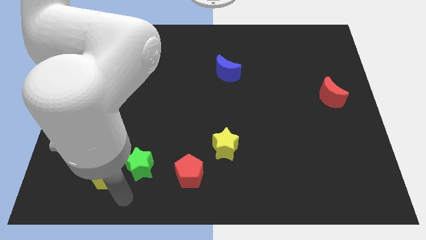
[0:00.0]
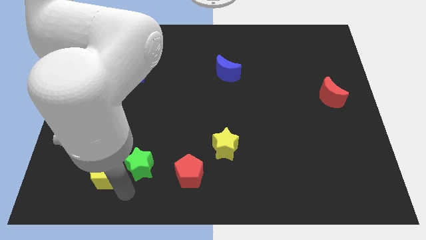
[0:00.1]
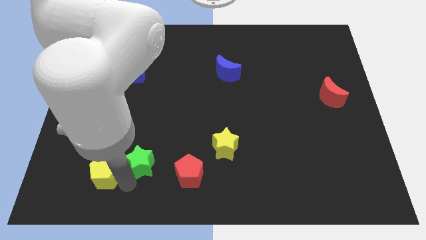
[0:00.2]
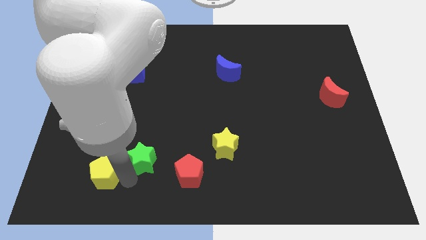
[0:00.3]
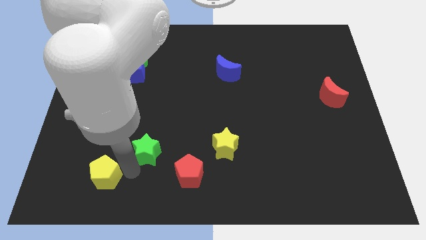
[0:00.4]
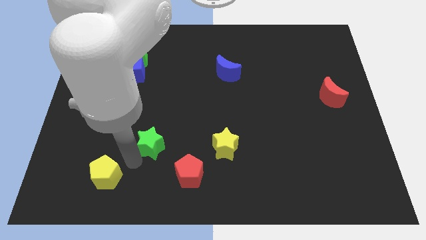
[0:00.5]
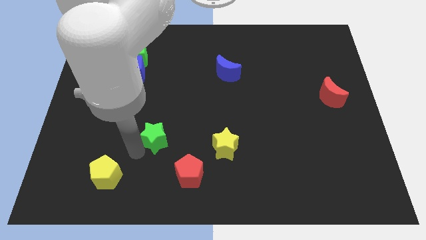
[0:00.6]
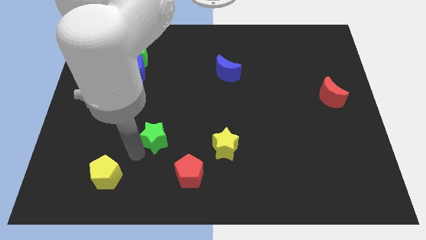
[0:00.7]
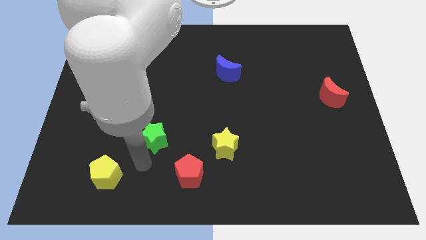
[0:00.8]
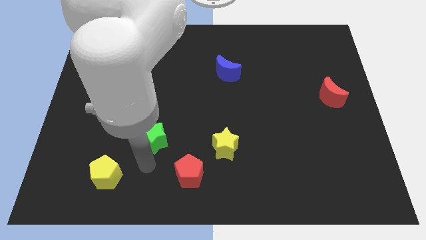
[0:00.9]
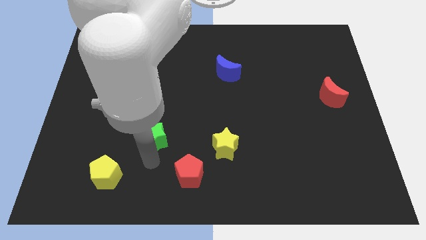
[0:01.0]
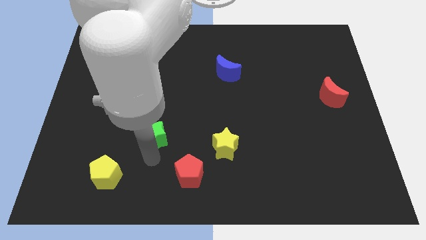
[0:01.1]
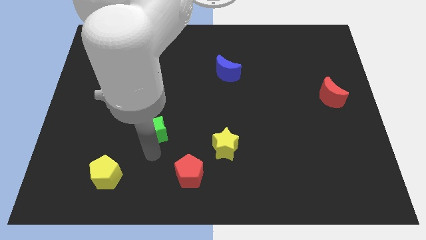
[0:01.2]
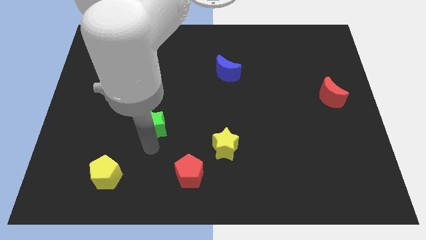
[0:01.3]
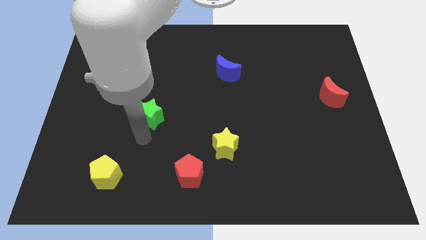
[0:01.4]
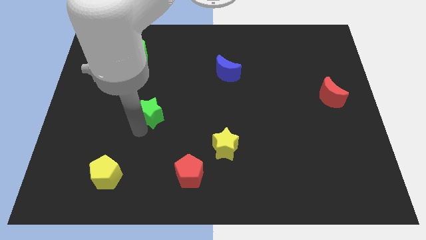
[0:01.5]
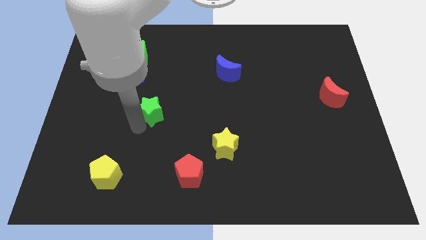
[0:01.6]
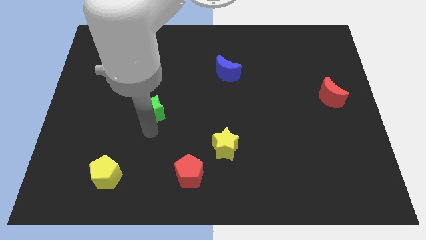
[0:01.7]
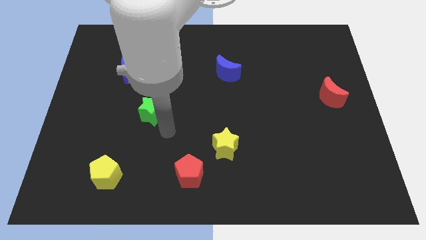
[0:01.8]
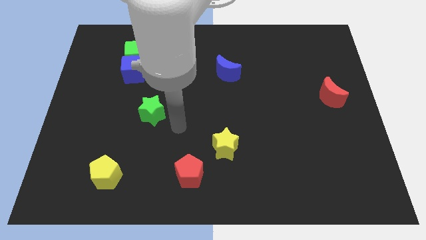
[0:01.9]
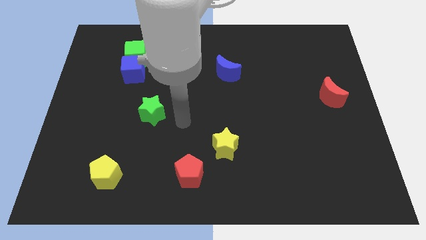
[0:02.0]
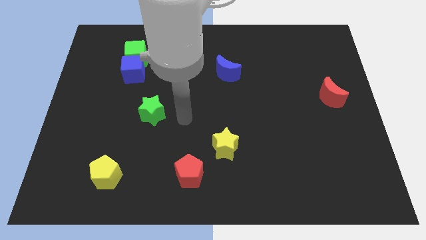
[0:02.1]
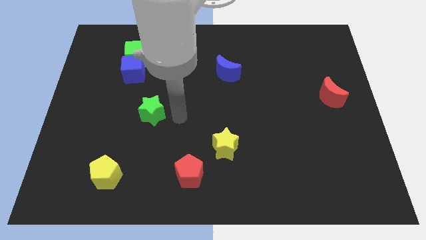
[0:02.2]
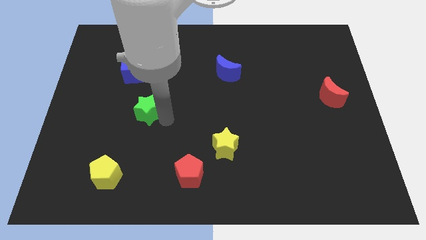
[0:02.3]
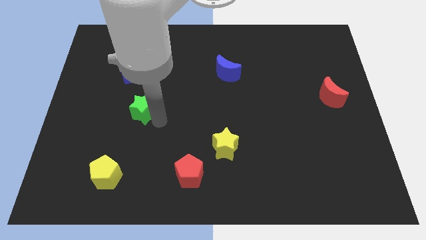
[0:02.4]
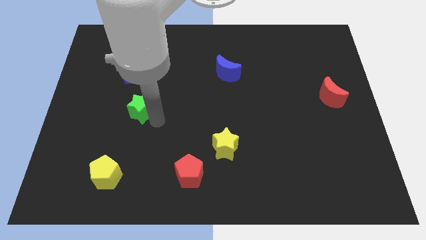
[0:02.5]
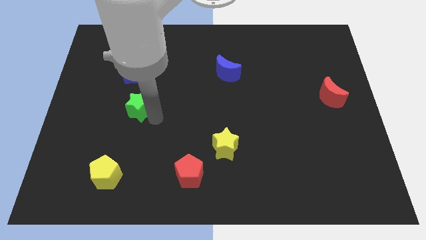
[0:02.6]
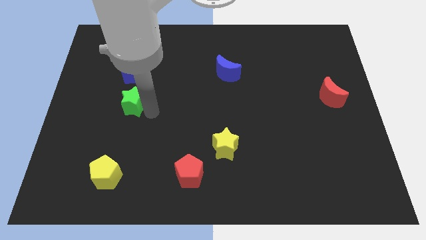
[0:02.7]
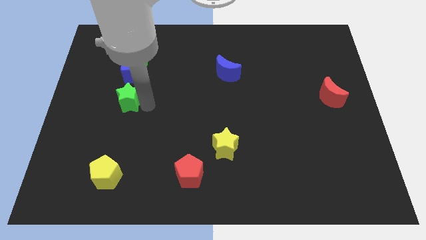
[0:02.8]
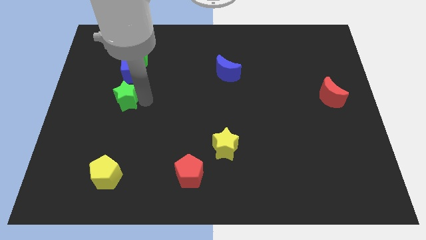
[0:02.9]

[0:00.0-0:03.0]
push the green star towards the center left side of the board

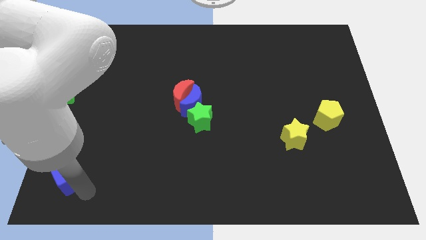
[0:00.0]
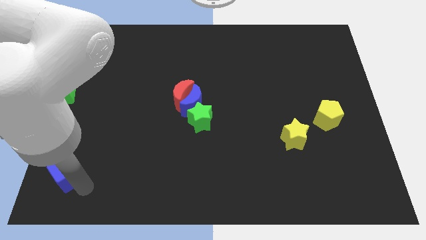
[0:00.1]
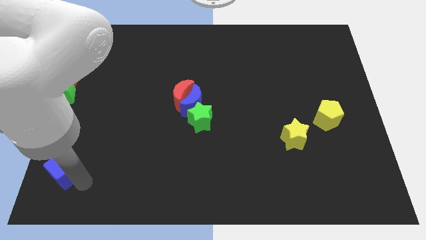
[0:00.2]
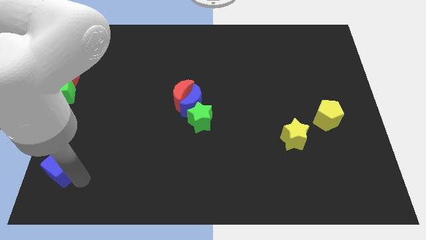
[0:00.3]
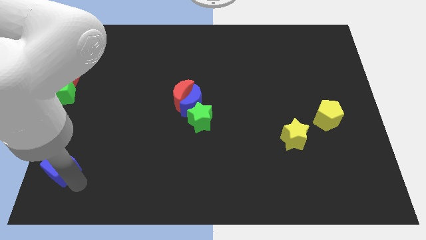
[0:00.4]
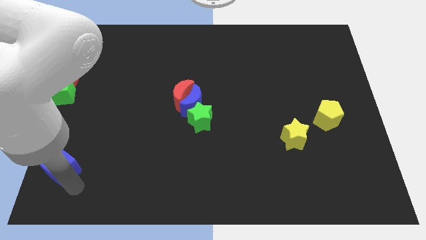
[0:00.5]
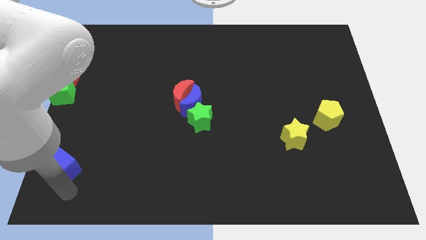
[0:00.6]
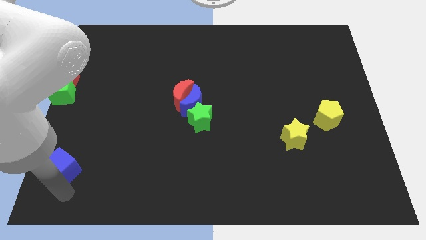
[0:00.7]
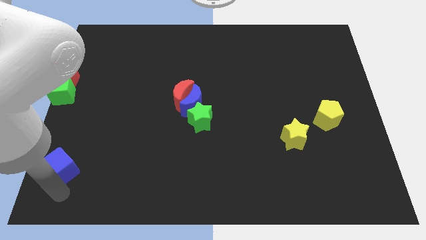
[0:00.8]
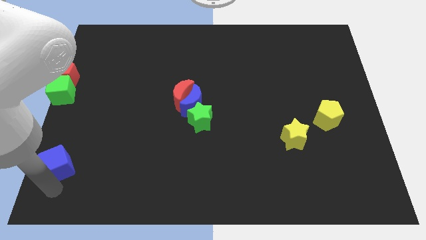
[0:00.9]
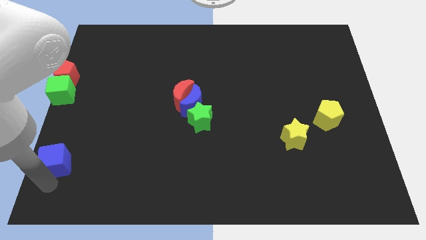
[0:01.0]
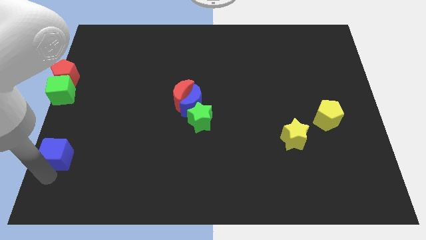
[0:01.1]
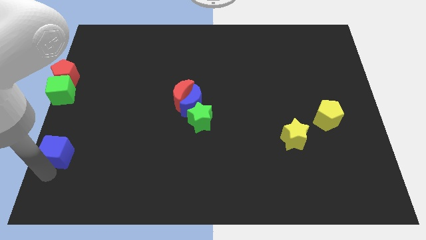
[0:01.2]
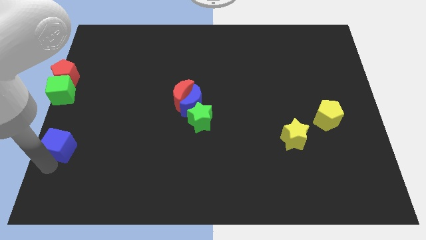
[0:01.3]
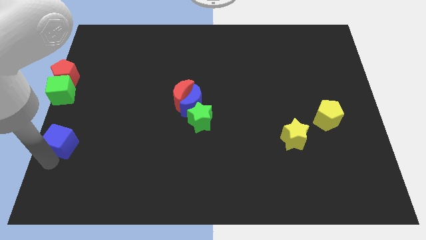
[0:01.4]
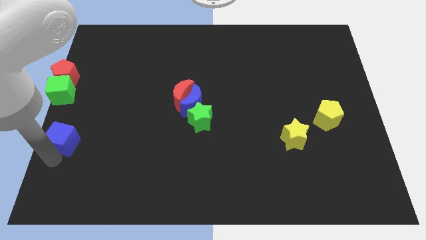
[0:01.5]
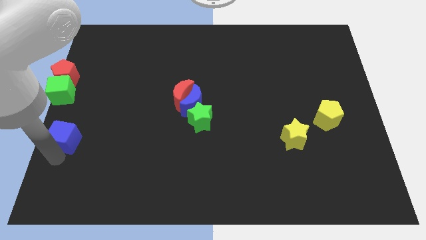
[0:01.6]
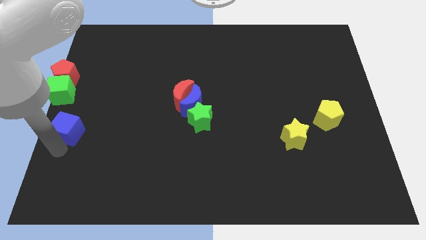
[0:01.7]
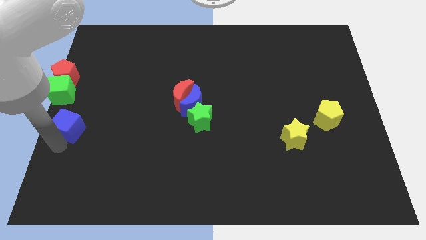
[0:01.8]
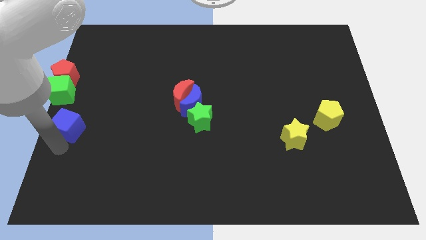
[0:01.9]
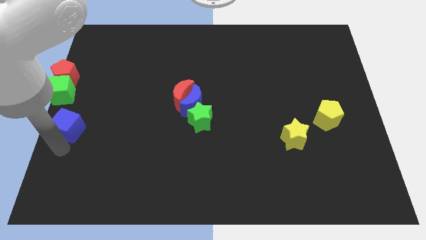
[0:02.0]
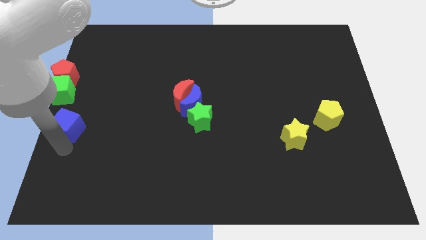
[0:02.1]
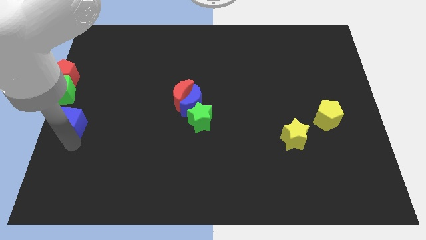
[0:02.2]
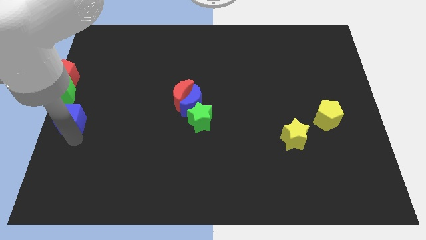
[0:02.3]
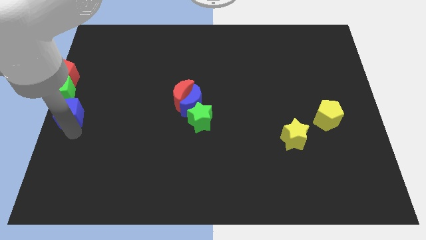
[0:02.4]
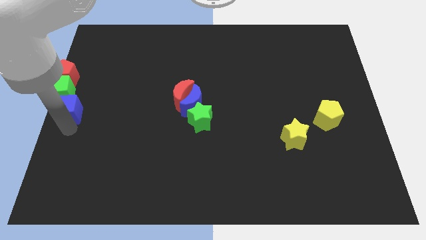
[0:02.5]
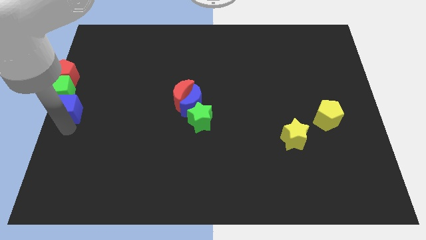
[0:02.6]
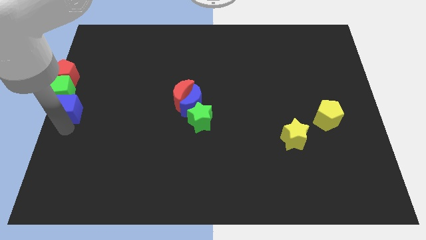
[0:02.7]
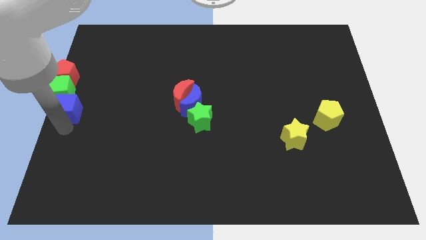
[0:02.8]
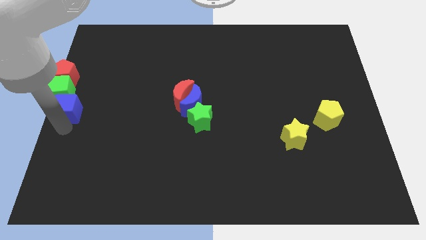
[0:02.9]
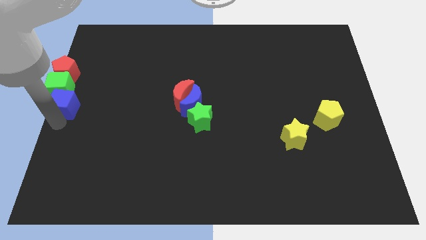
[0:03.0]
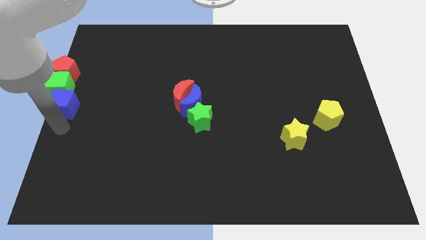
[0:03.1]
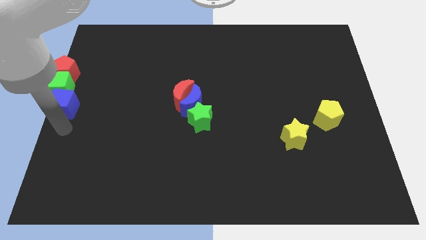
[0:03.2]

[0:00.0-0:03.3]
move the blue cube towards the left center of the board

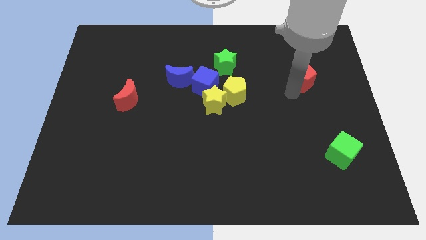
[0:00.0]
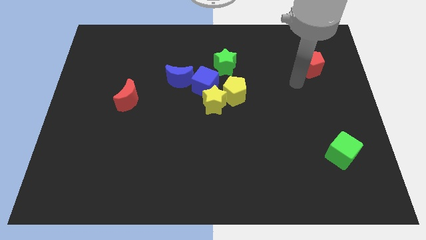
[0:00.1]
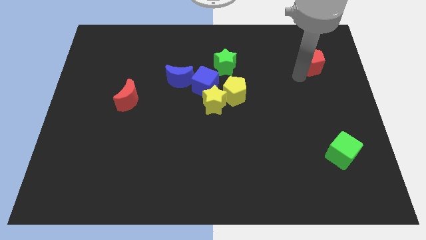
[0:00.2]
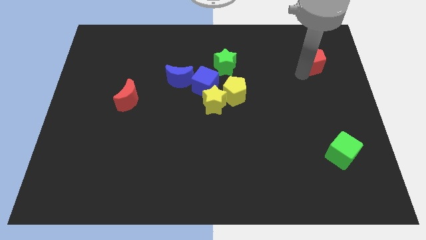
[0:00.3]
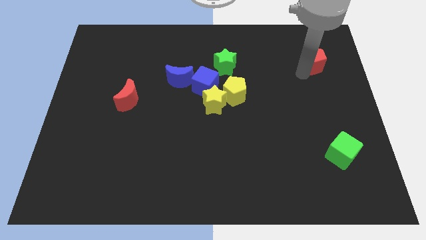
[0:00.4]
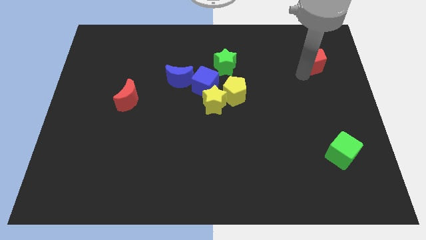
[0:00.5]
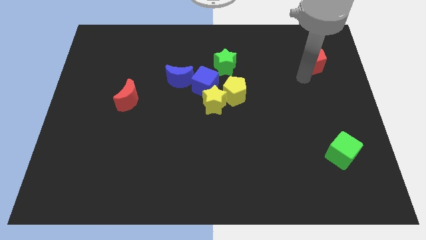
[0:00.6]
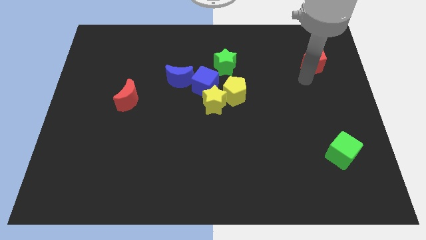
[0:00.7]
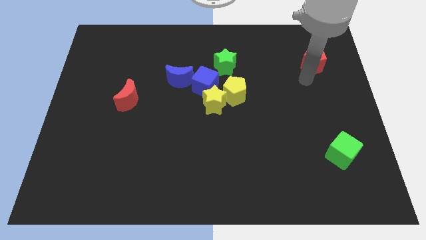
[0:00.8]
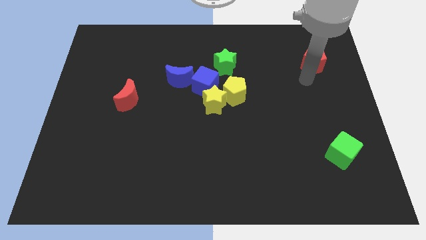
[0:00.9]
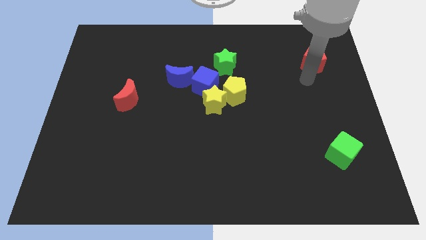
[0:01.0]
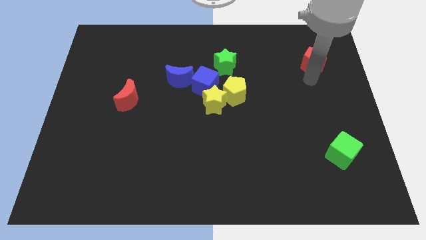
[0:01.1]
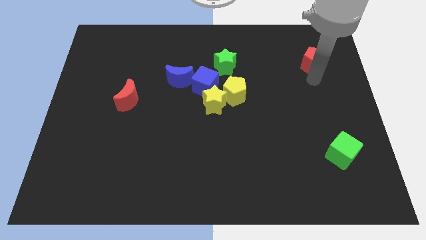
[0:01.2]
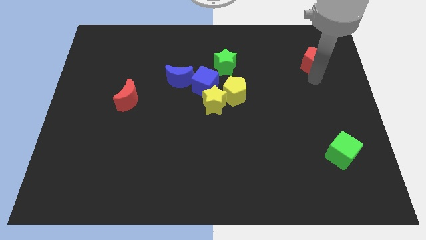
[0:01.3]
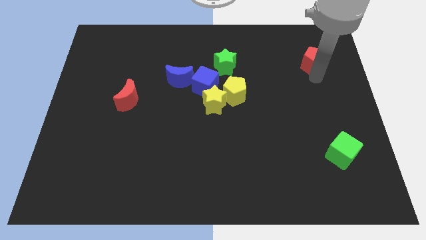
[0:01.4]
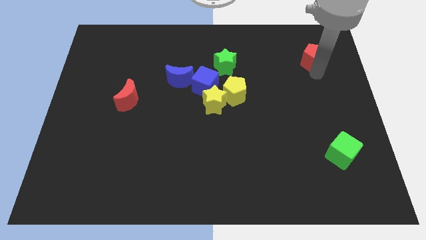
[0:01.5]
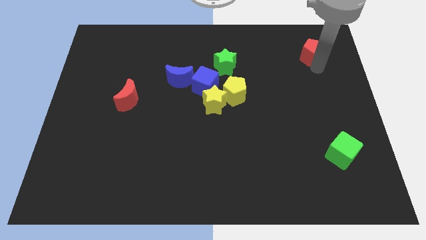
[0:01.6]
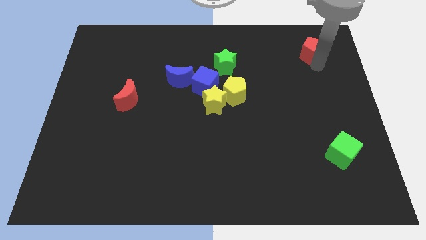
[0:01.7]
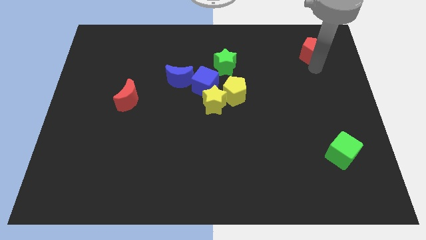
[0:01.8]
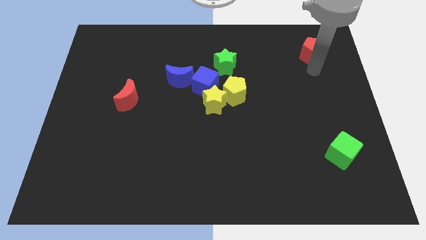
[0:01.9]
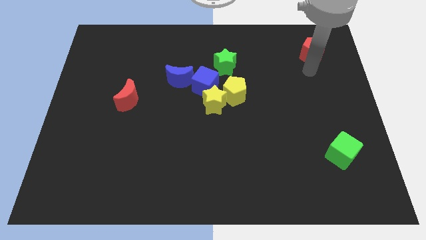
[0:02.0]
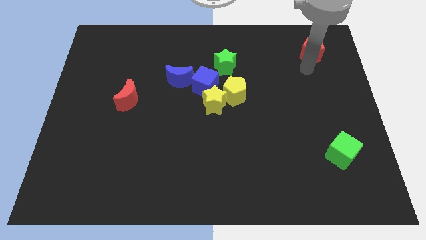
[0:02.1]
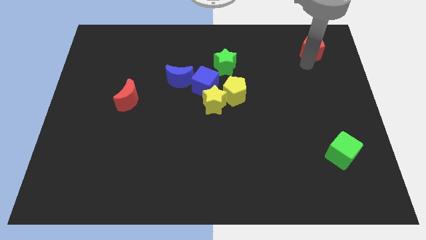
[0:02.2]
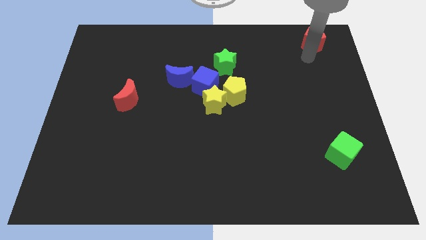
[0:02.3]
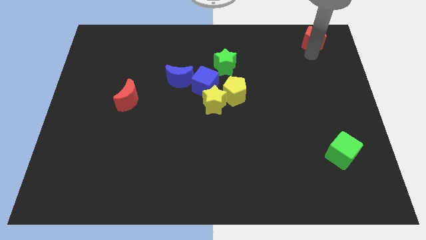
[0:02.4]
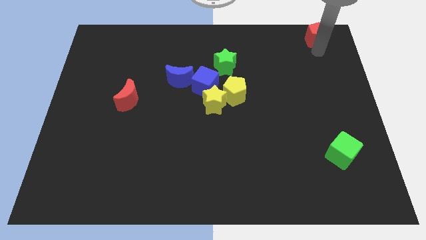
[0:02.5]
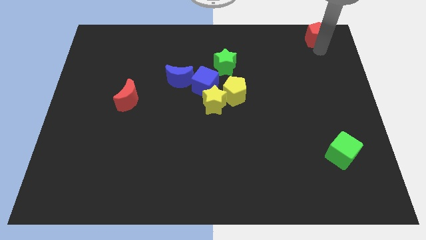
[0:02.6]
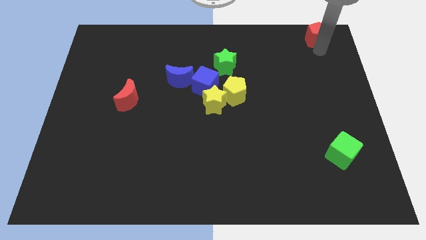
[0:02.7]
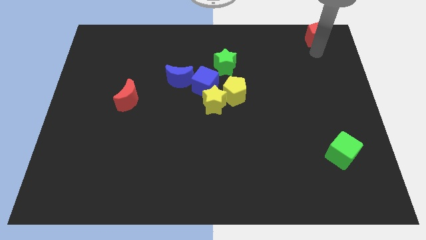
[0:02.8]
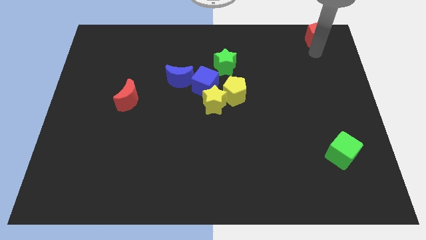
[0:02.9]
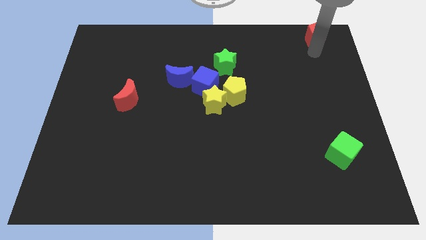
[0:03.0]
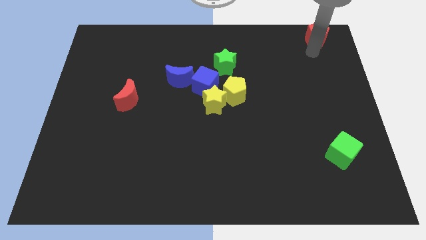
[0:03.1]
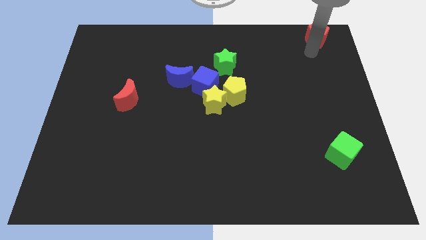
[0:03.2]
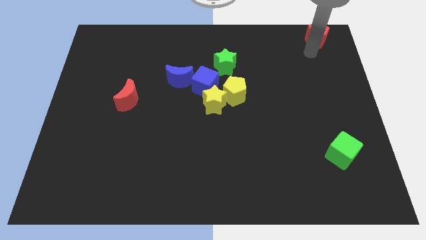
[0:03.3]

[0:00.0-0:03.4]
push red pentagon to the top right side of the board
